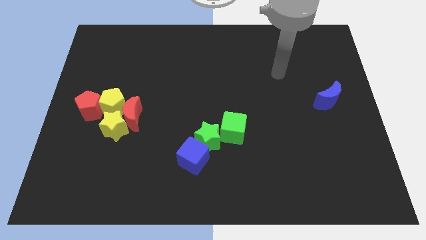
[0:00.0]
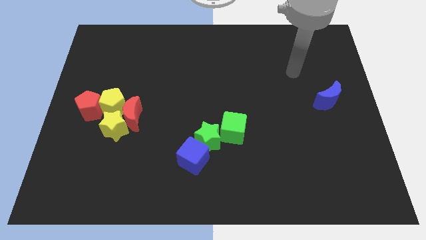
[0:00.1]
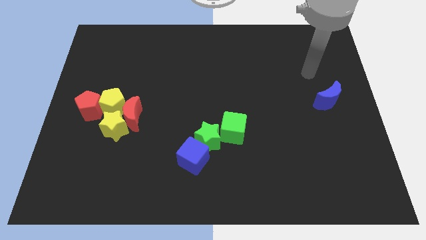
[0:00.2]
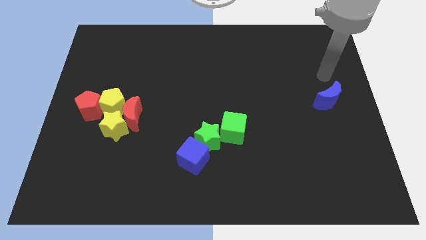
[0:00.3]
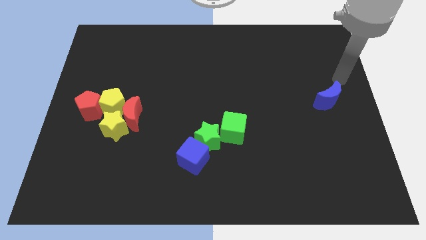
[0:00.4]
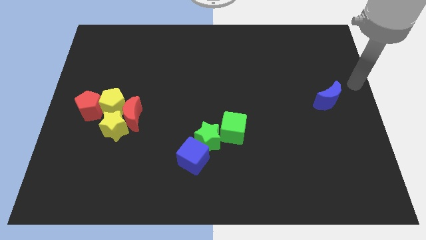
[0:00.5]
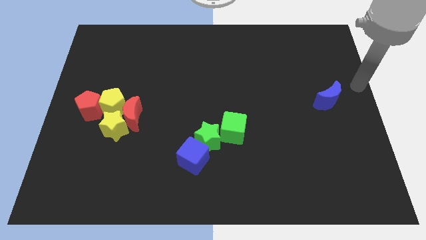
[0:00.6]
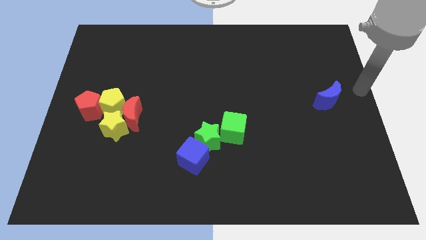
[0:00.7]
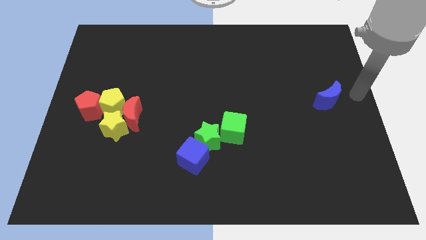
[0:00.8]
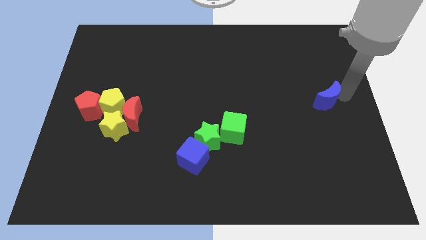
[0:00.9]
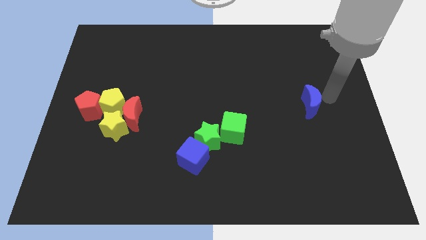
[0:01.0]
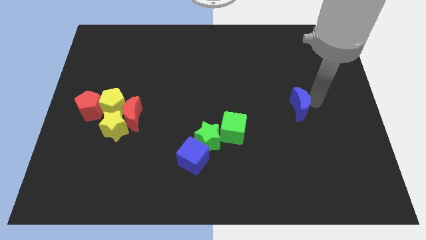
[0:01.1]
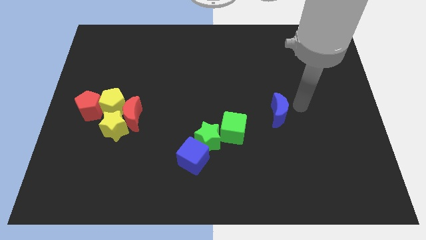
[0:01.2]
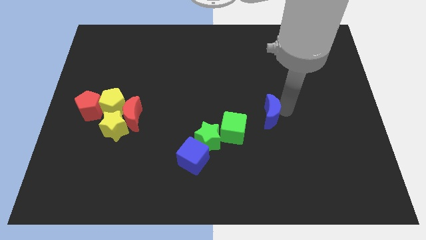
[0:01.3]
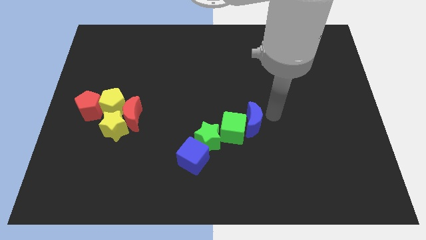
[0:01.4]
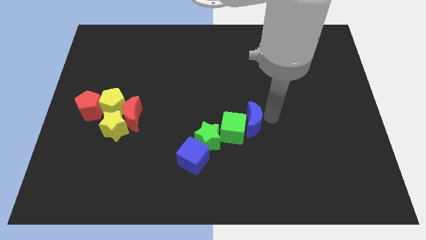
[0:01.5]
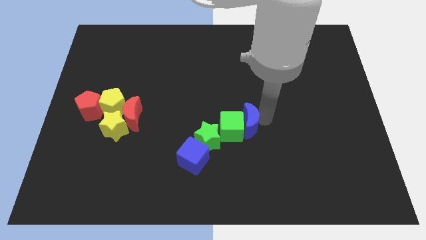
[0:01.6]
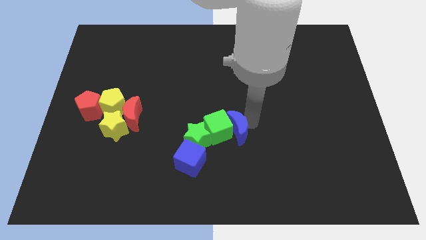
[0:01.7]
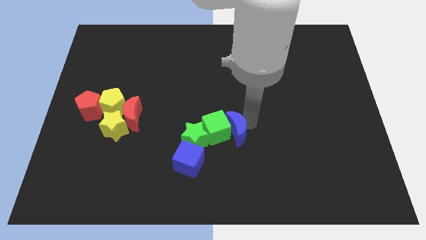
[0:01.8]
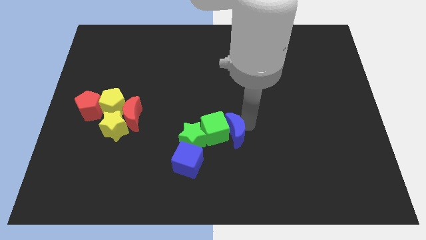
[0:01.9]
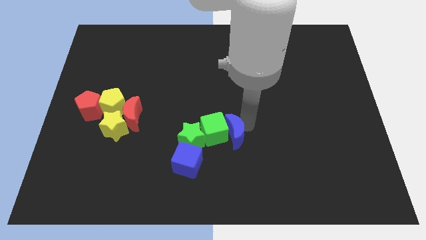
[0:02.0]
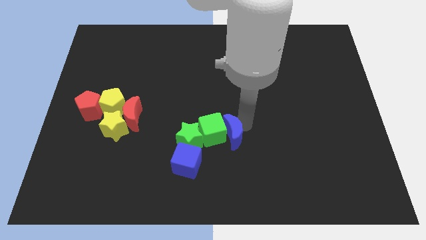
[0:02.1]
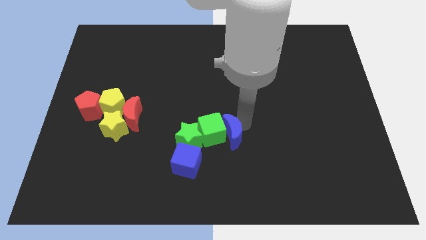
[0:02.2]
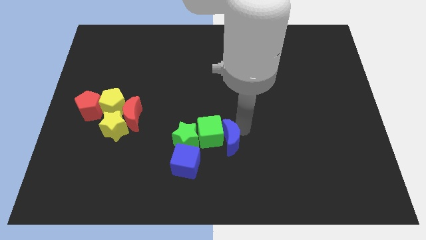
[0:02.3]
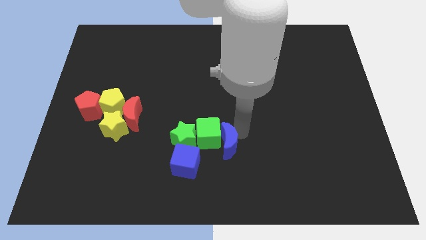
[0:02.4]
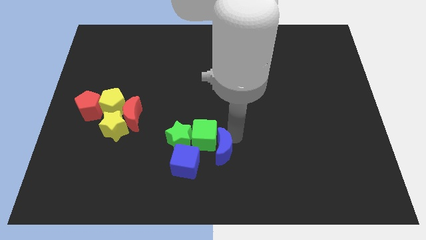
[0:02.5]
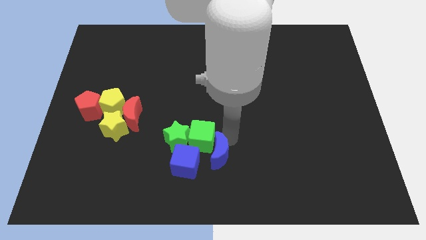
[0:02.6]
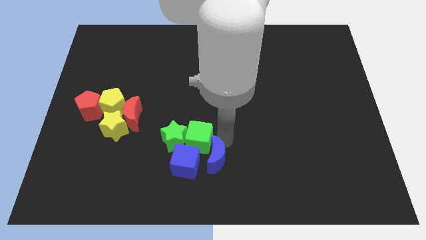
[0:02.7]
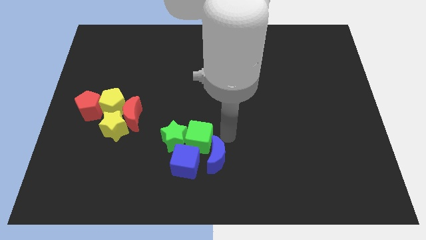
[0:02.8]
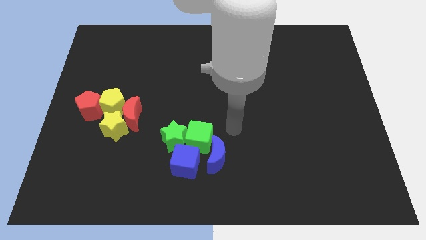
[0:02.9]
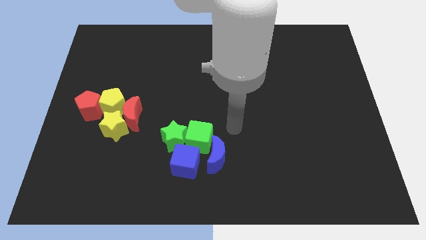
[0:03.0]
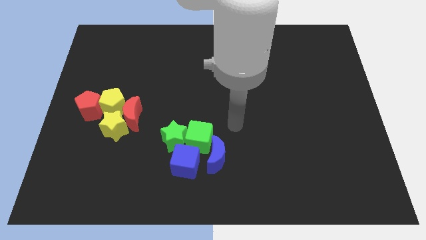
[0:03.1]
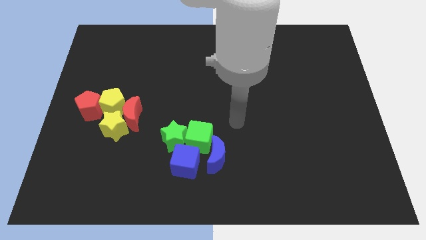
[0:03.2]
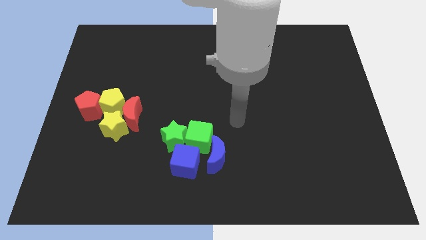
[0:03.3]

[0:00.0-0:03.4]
place blue moon to the right of the blue cube

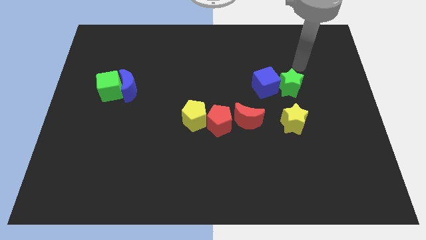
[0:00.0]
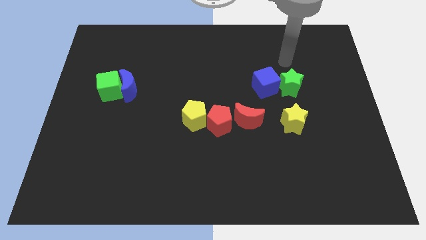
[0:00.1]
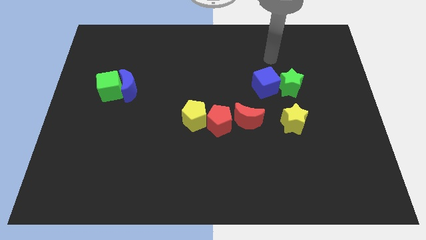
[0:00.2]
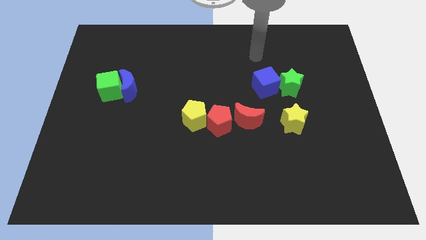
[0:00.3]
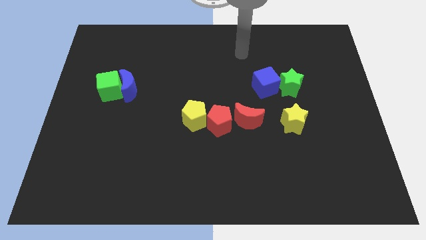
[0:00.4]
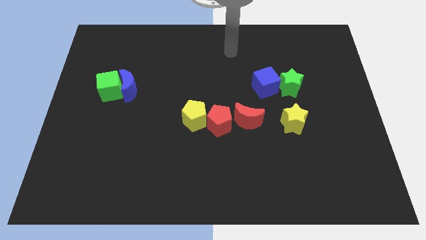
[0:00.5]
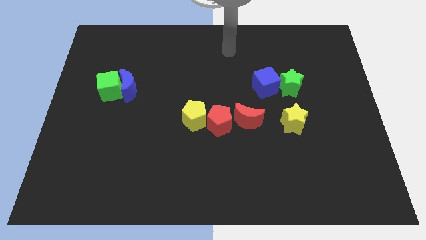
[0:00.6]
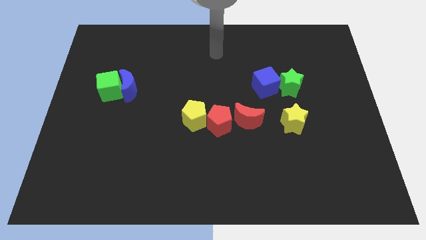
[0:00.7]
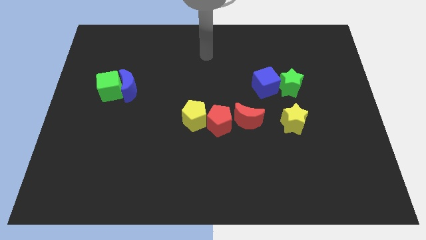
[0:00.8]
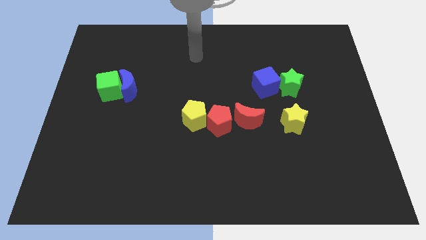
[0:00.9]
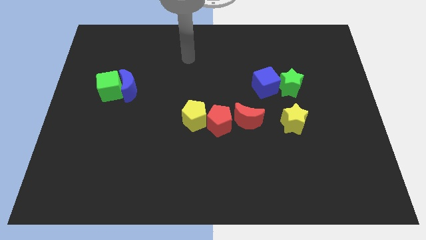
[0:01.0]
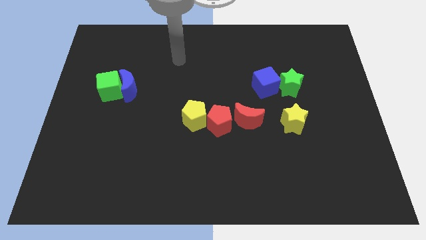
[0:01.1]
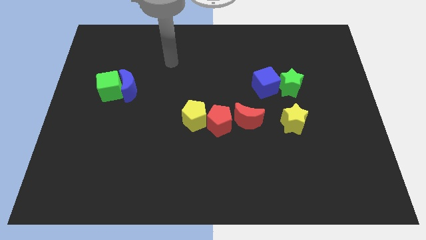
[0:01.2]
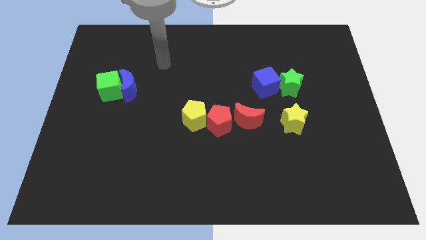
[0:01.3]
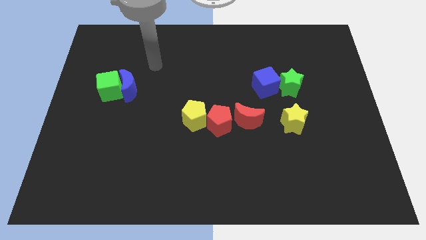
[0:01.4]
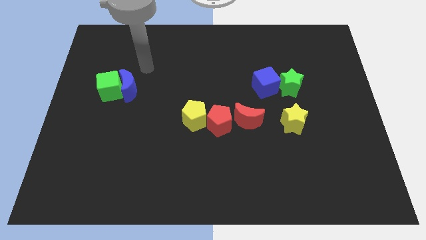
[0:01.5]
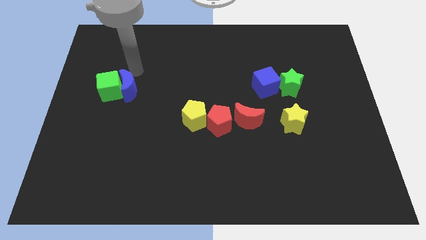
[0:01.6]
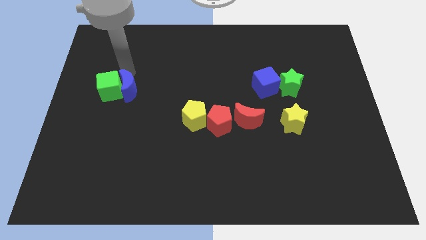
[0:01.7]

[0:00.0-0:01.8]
point your hand at the top right side of the blue moon

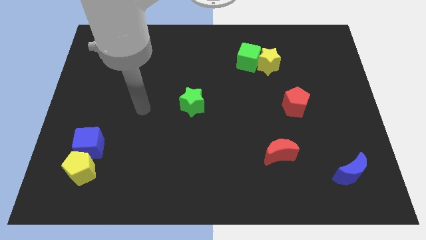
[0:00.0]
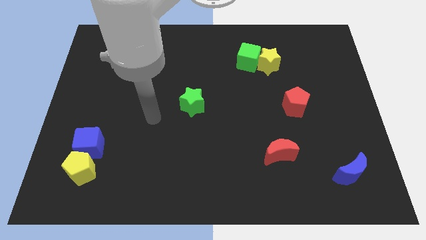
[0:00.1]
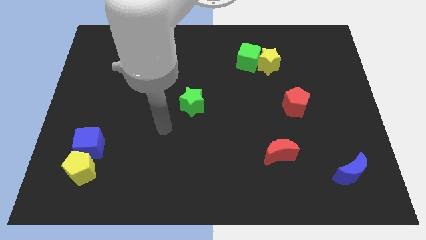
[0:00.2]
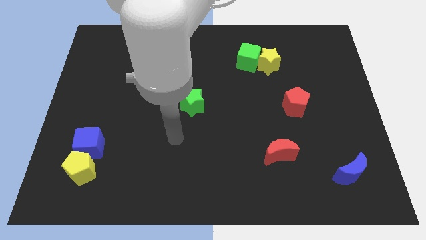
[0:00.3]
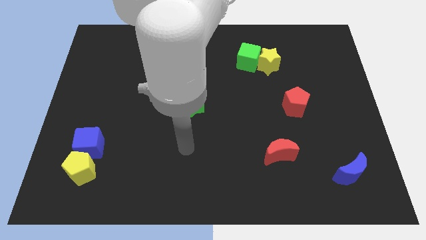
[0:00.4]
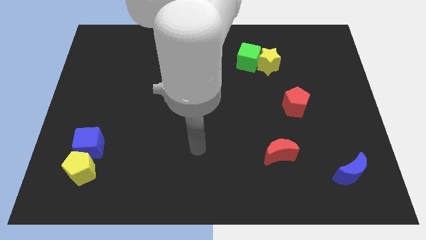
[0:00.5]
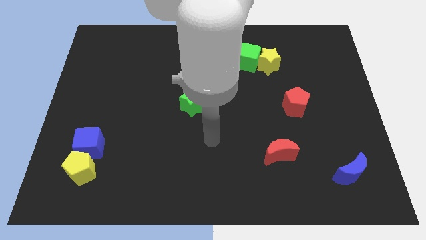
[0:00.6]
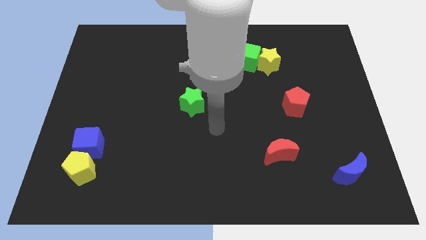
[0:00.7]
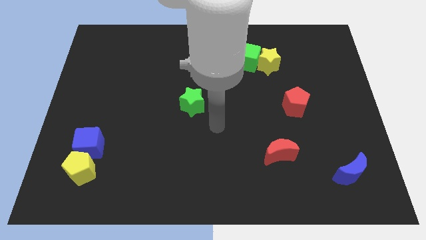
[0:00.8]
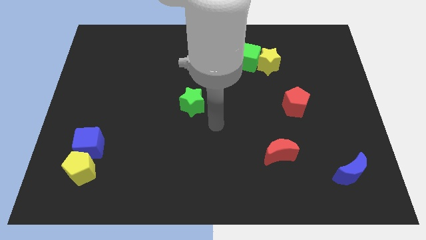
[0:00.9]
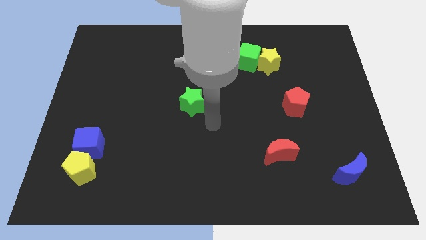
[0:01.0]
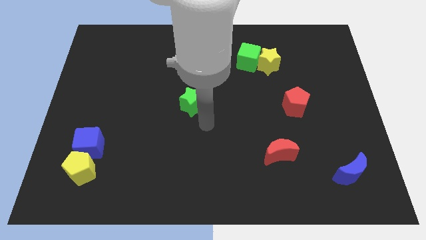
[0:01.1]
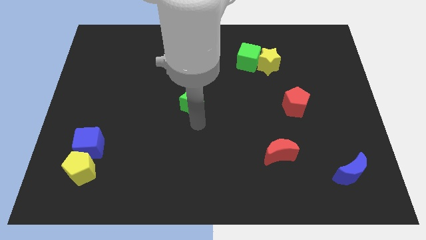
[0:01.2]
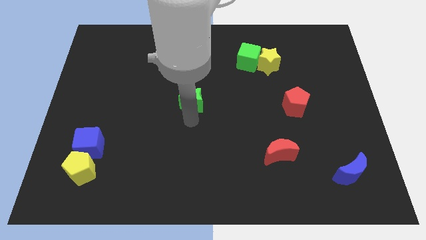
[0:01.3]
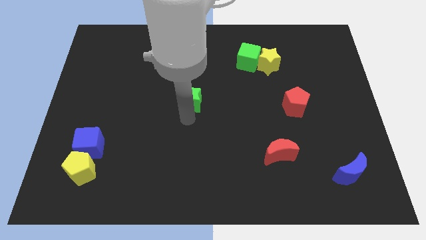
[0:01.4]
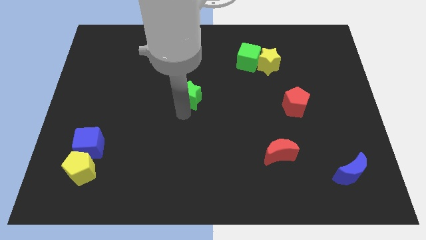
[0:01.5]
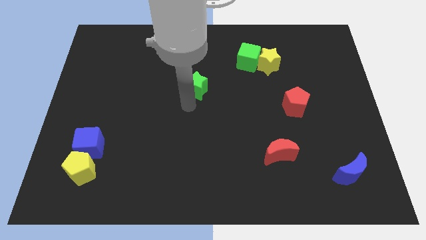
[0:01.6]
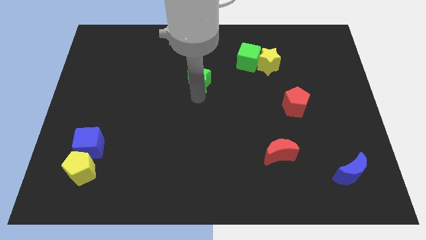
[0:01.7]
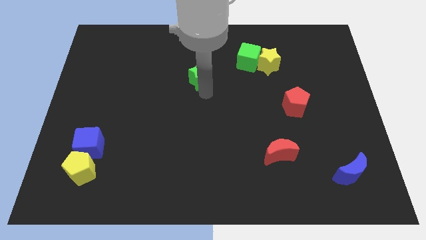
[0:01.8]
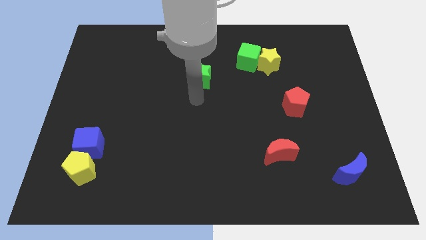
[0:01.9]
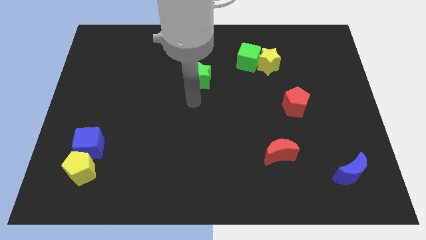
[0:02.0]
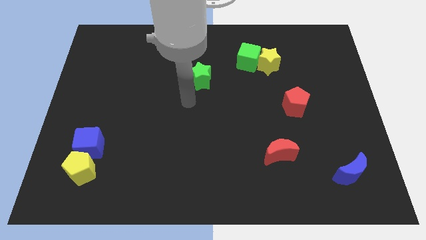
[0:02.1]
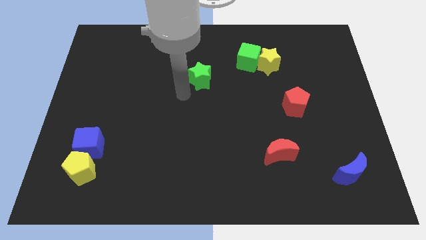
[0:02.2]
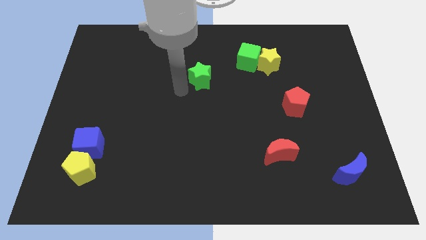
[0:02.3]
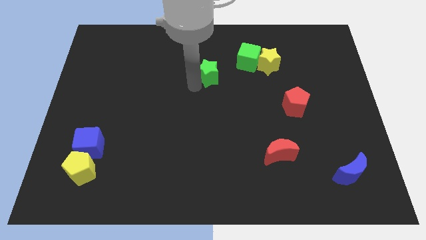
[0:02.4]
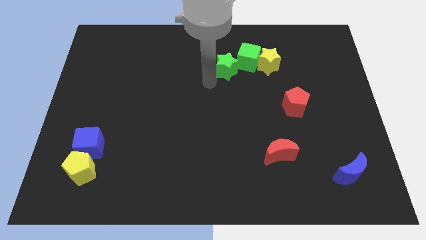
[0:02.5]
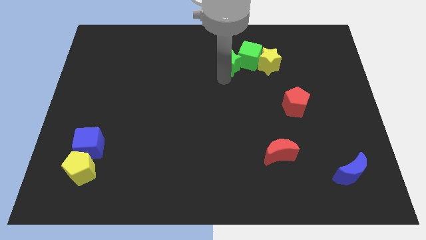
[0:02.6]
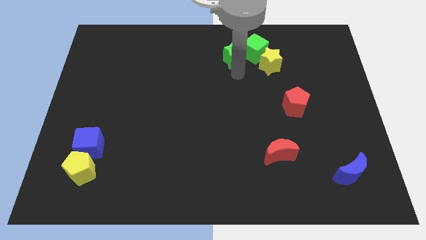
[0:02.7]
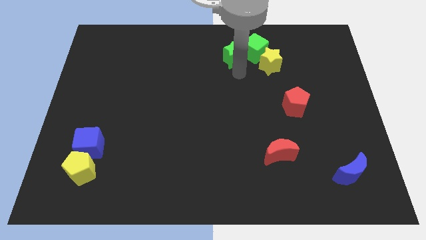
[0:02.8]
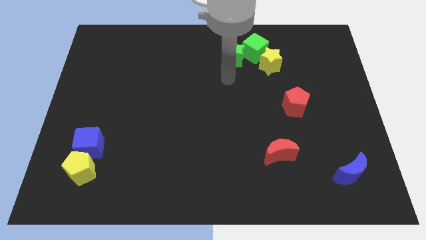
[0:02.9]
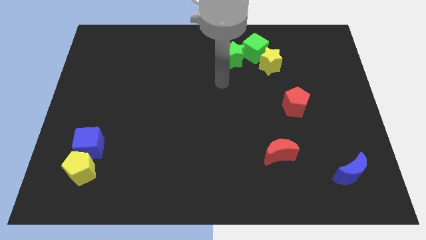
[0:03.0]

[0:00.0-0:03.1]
move the green star into green cube

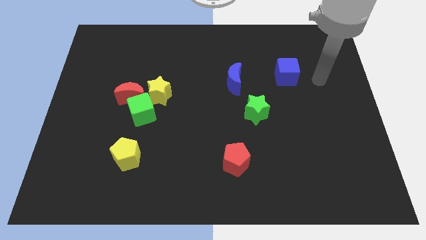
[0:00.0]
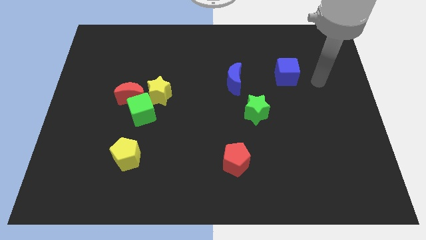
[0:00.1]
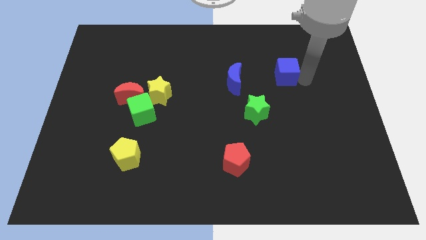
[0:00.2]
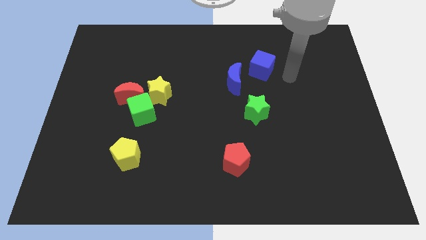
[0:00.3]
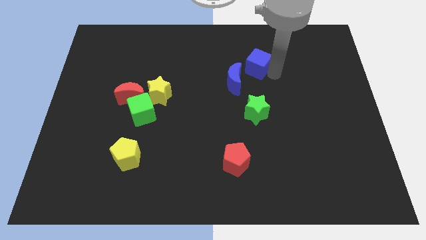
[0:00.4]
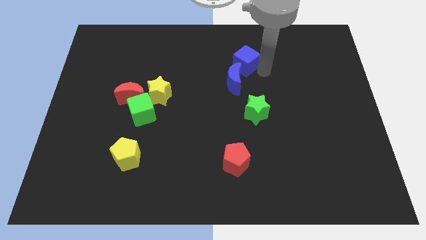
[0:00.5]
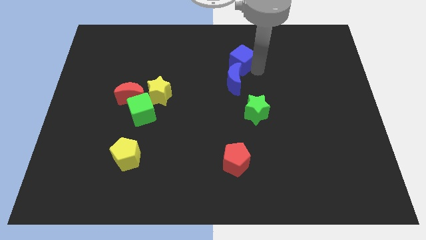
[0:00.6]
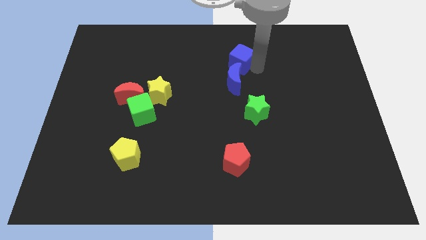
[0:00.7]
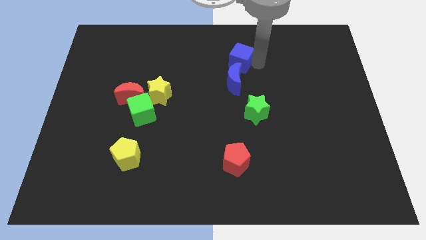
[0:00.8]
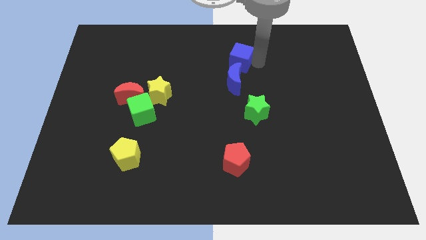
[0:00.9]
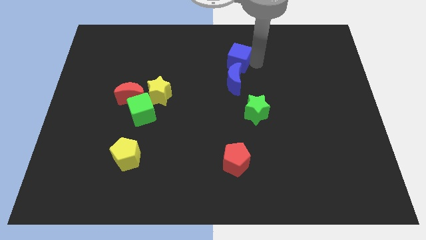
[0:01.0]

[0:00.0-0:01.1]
put the blue cube above the blue moon
